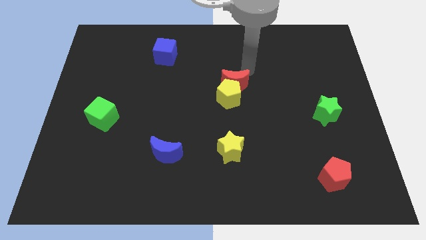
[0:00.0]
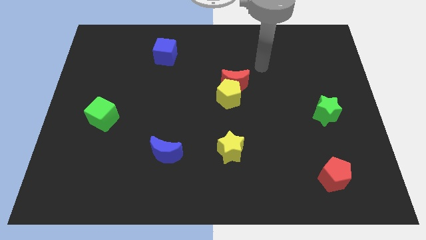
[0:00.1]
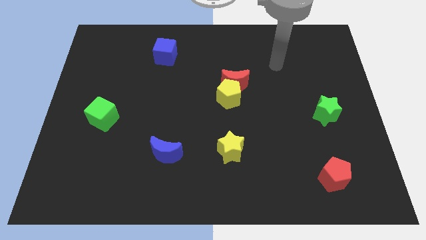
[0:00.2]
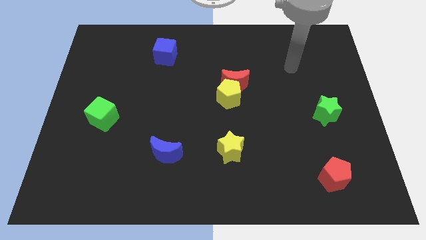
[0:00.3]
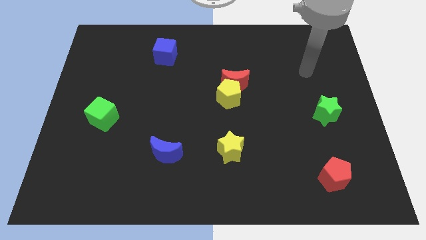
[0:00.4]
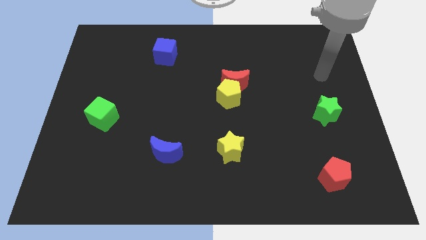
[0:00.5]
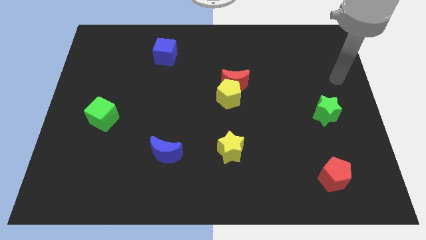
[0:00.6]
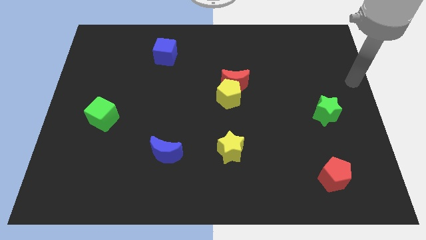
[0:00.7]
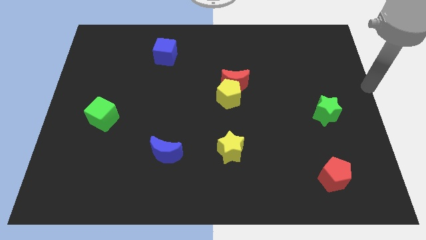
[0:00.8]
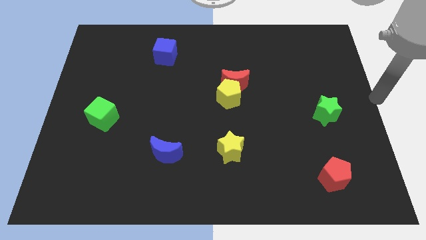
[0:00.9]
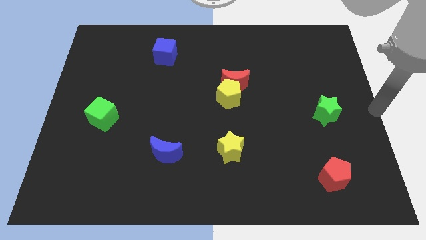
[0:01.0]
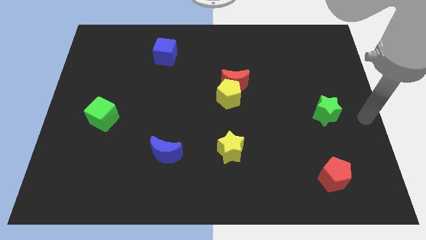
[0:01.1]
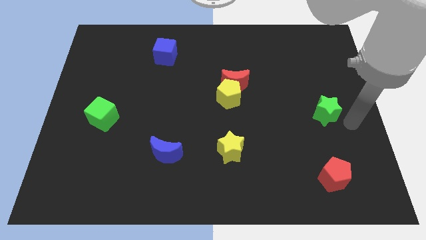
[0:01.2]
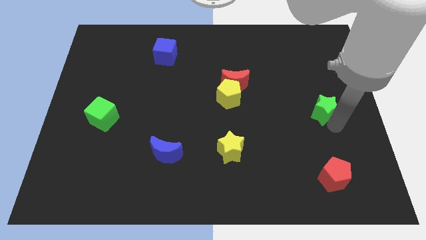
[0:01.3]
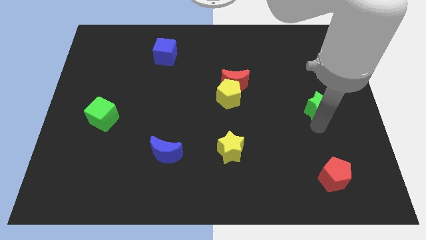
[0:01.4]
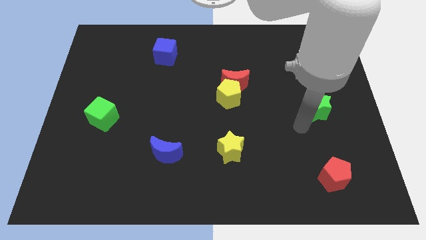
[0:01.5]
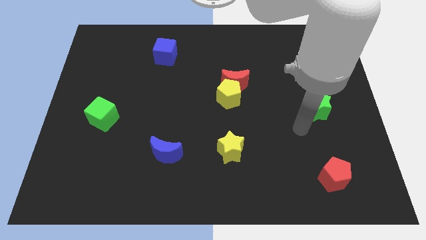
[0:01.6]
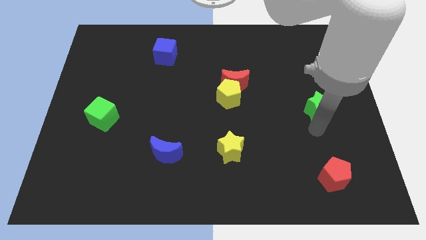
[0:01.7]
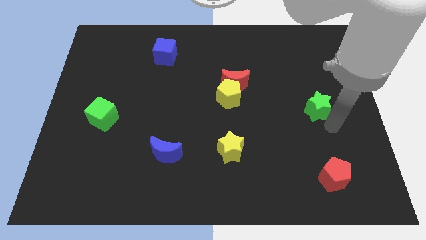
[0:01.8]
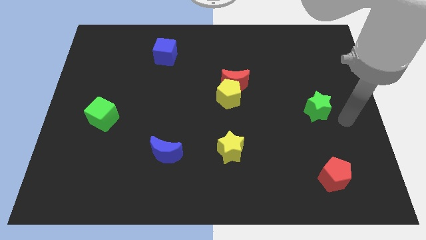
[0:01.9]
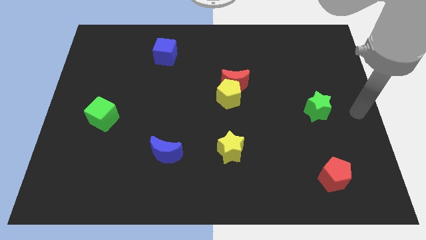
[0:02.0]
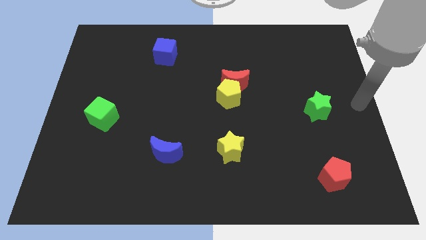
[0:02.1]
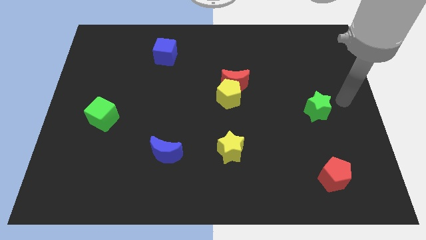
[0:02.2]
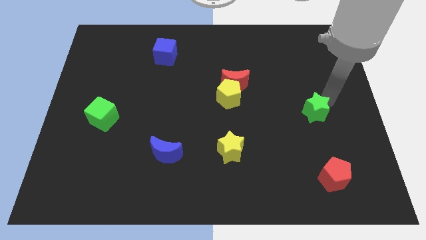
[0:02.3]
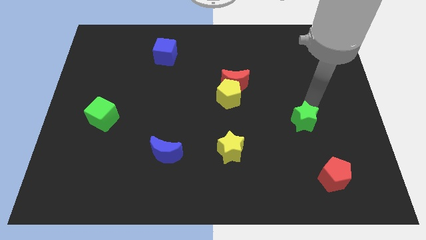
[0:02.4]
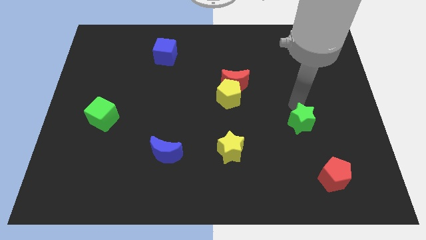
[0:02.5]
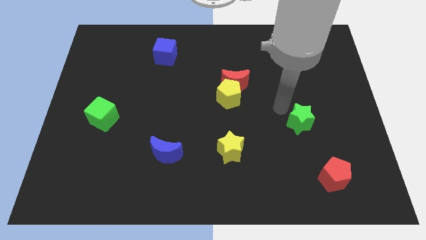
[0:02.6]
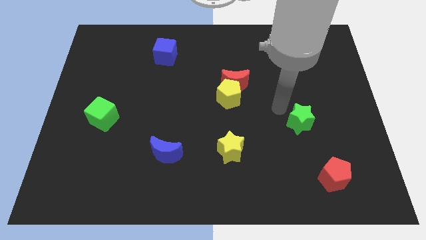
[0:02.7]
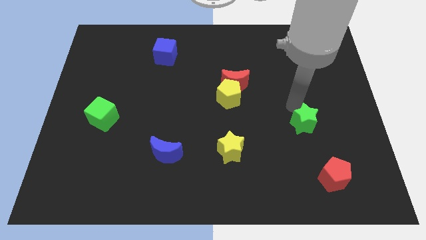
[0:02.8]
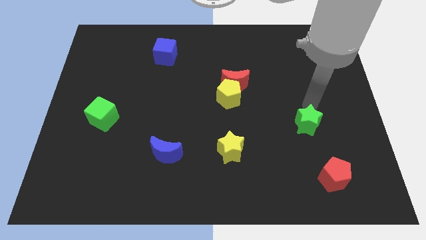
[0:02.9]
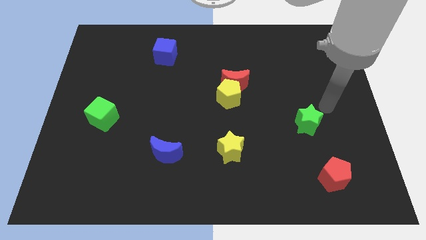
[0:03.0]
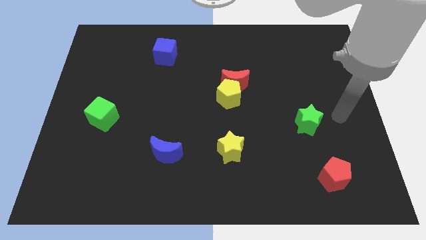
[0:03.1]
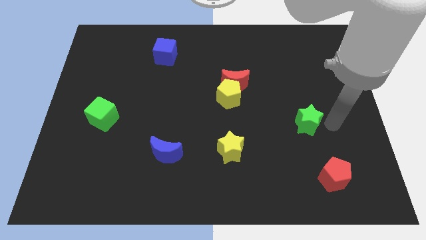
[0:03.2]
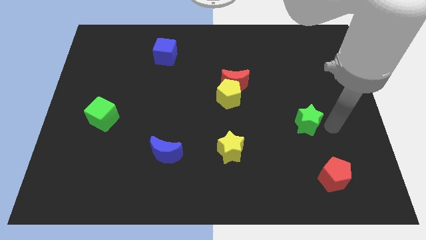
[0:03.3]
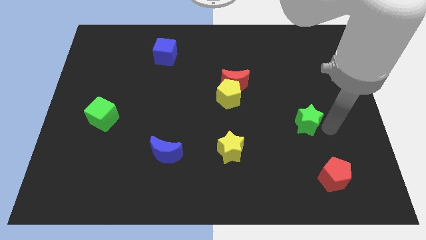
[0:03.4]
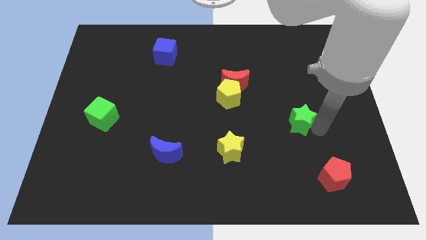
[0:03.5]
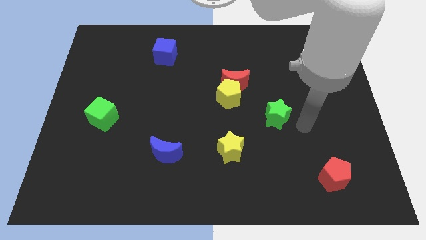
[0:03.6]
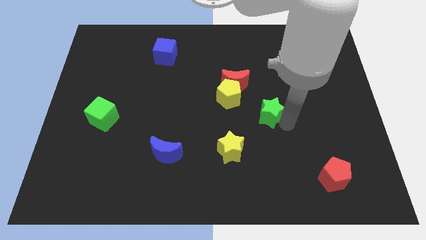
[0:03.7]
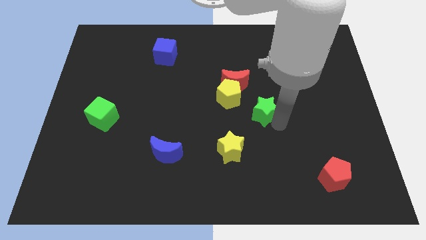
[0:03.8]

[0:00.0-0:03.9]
move the green star diagonally top left to the red pentagon

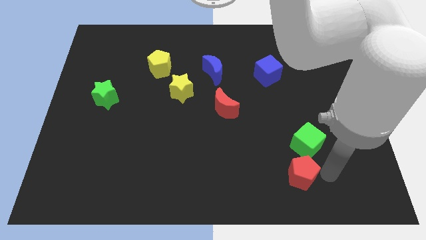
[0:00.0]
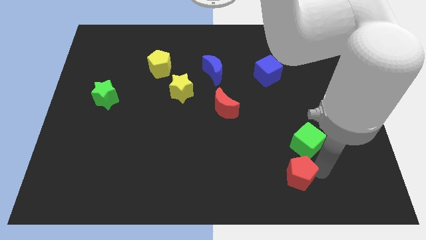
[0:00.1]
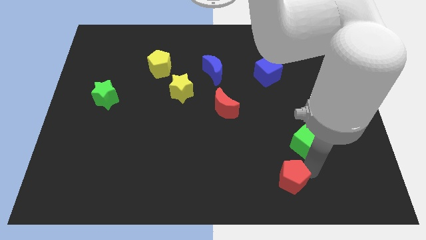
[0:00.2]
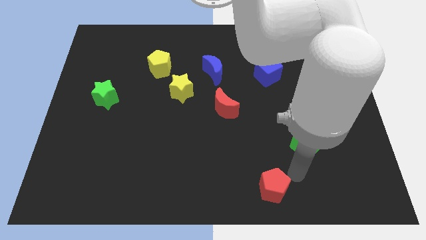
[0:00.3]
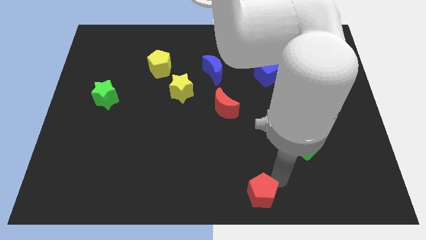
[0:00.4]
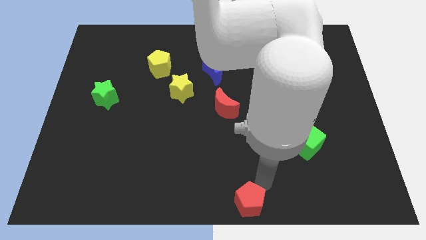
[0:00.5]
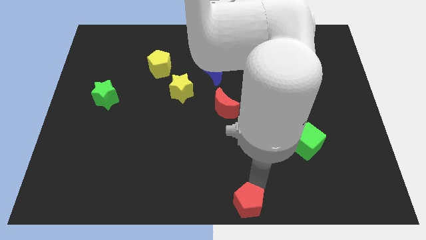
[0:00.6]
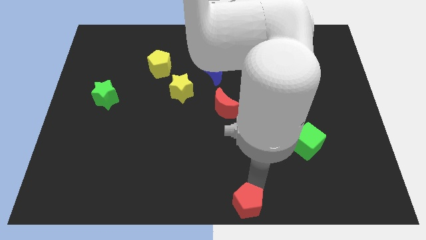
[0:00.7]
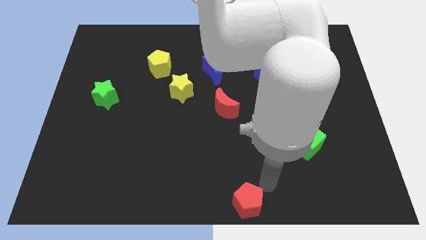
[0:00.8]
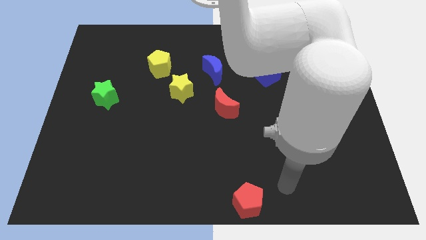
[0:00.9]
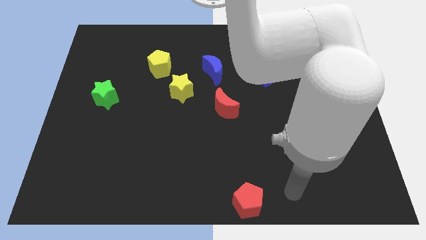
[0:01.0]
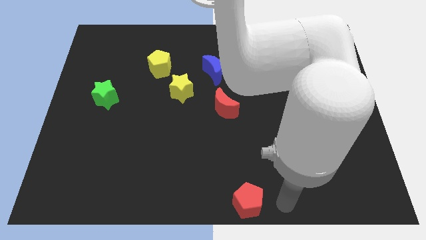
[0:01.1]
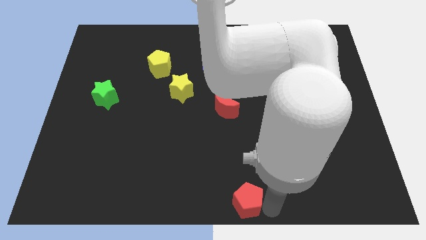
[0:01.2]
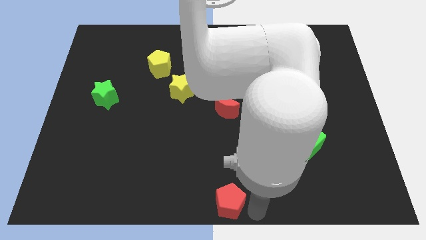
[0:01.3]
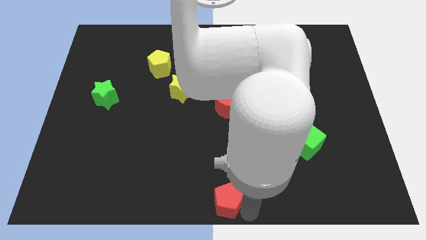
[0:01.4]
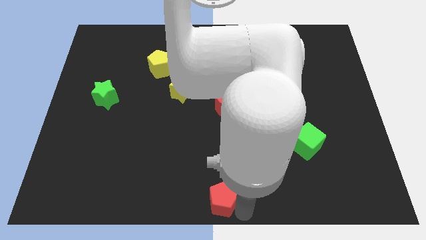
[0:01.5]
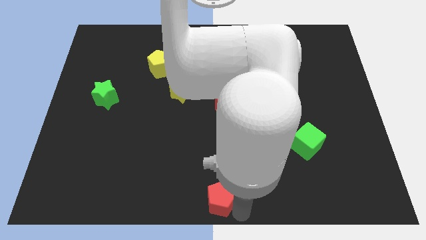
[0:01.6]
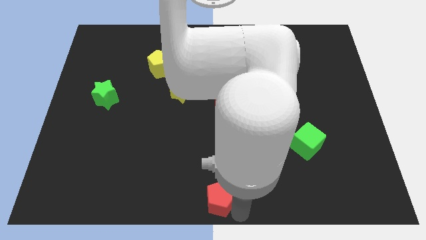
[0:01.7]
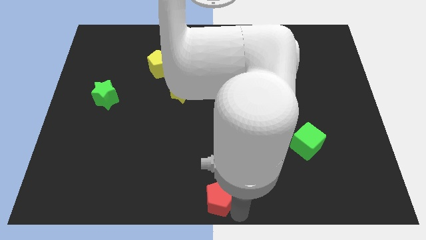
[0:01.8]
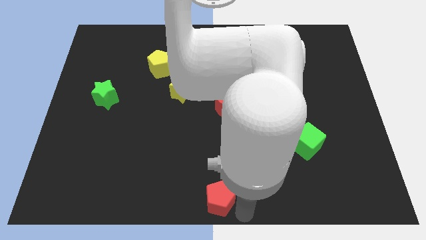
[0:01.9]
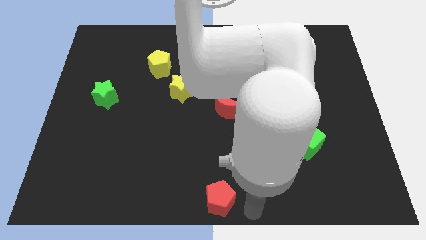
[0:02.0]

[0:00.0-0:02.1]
move the red pentagon to the bottom center

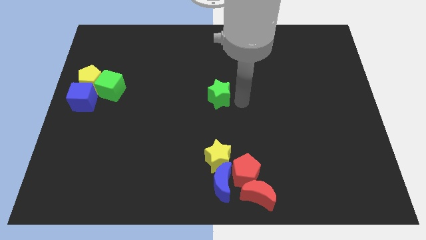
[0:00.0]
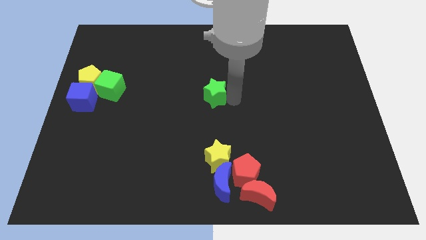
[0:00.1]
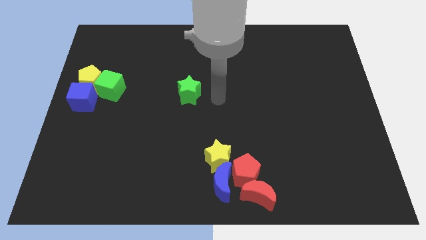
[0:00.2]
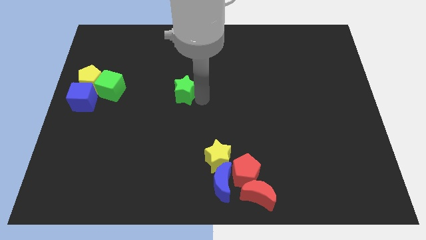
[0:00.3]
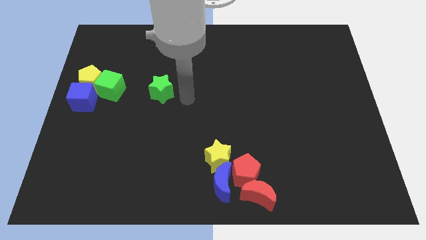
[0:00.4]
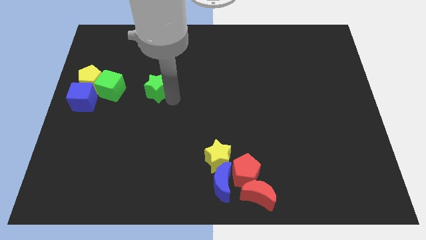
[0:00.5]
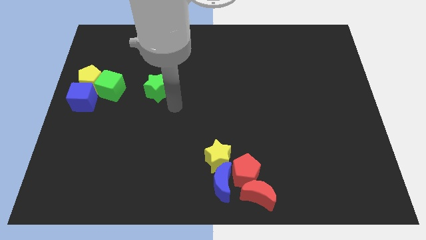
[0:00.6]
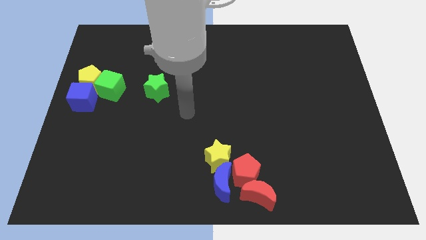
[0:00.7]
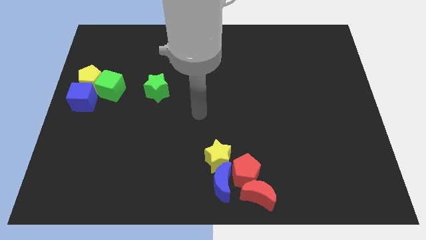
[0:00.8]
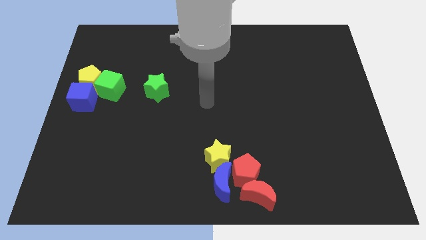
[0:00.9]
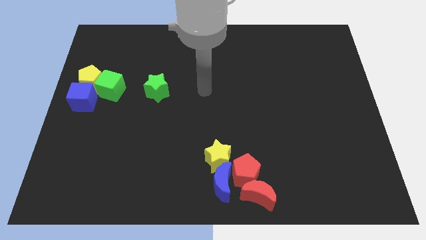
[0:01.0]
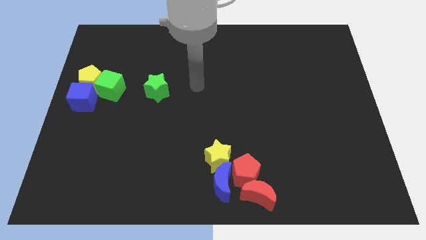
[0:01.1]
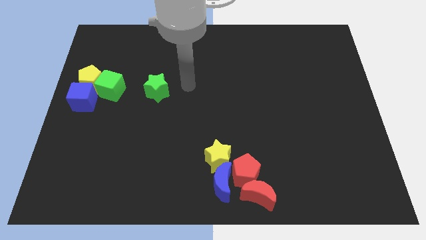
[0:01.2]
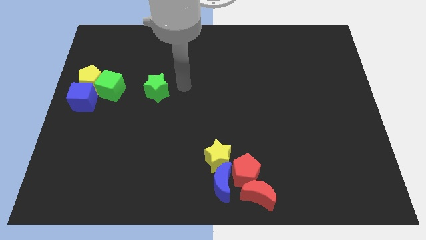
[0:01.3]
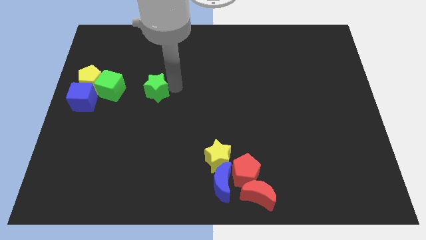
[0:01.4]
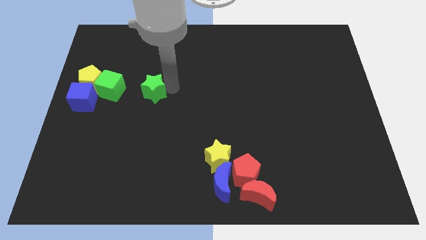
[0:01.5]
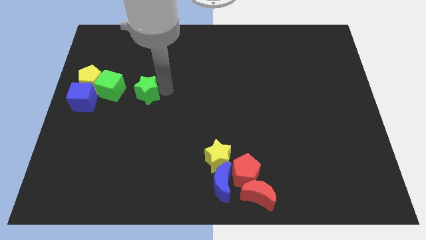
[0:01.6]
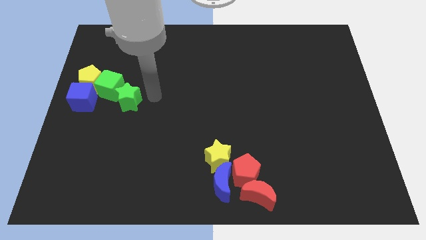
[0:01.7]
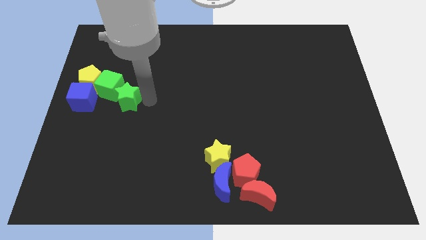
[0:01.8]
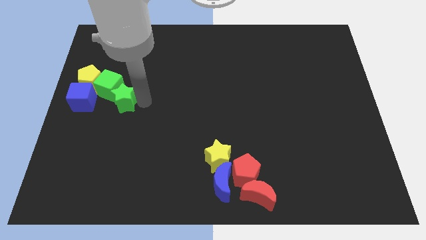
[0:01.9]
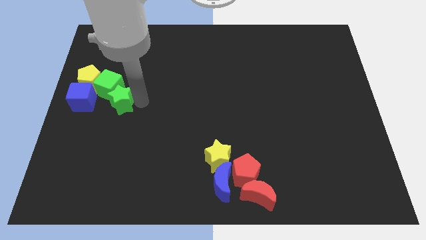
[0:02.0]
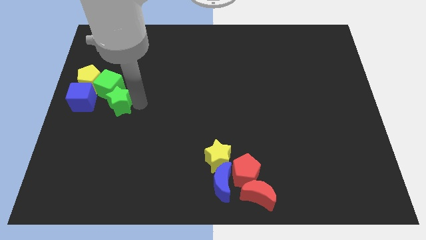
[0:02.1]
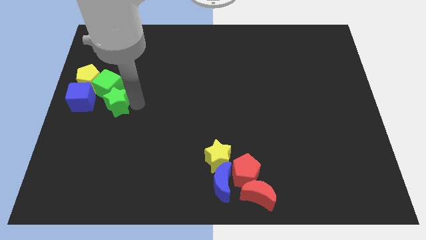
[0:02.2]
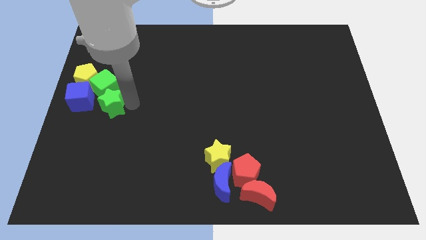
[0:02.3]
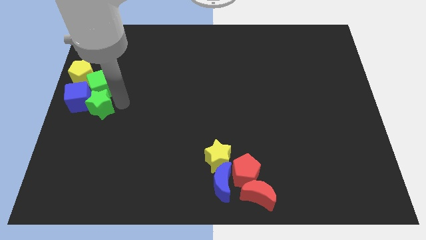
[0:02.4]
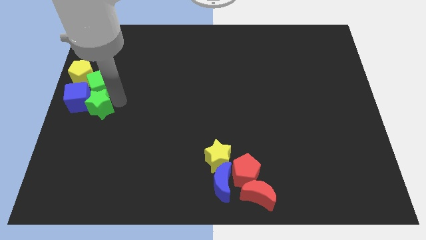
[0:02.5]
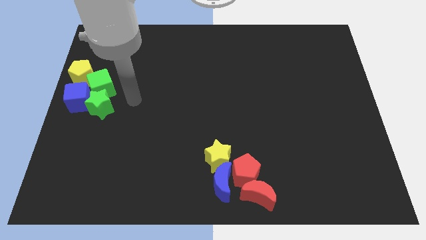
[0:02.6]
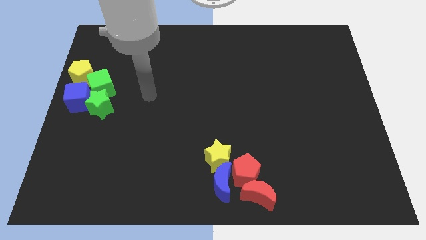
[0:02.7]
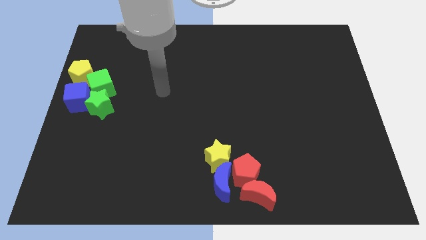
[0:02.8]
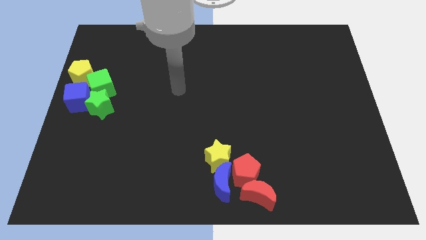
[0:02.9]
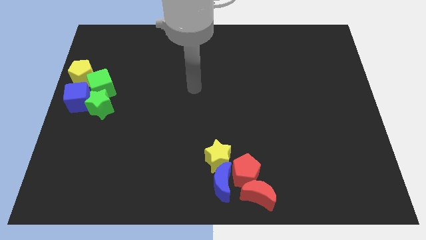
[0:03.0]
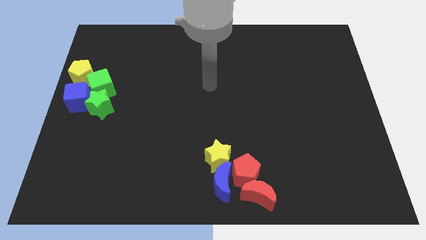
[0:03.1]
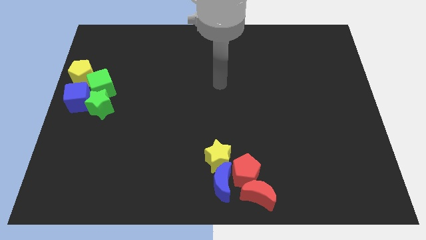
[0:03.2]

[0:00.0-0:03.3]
push the green star into green cube
